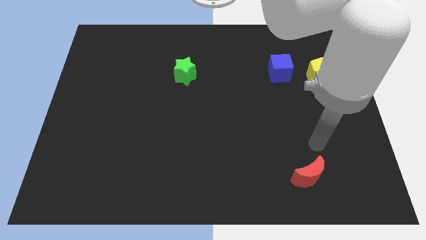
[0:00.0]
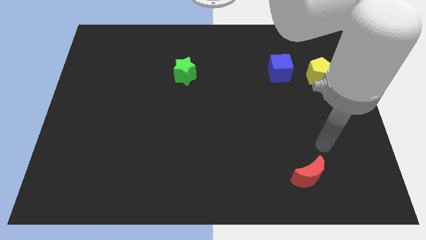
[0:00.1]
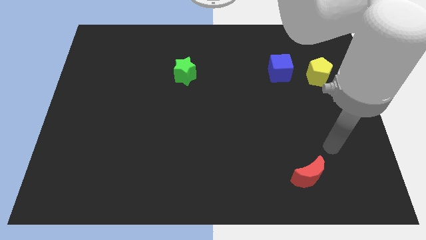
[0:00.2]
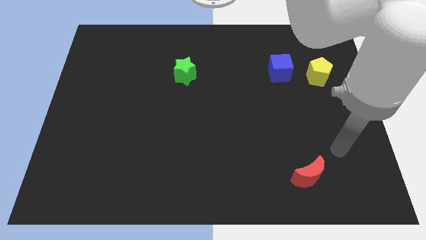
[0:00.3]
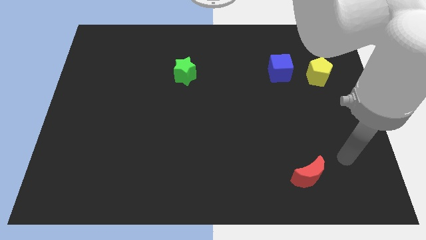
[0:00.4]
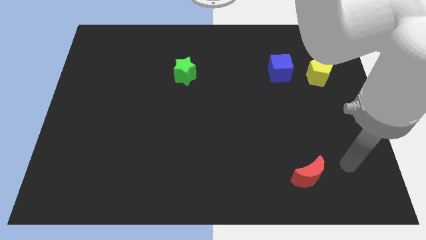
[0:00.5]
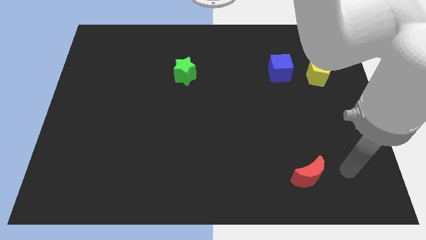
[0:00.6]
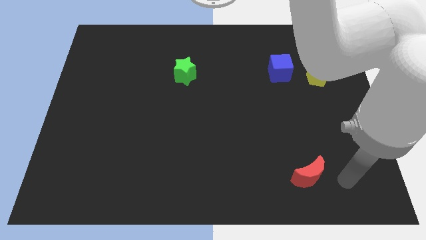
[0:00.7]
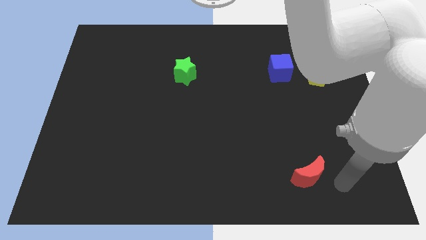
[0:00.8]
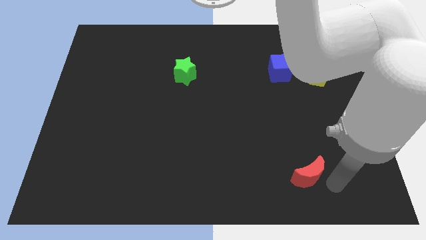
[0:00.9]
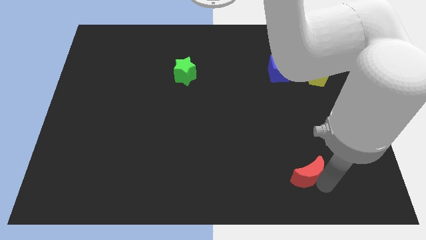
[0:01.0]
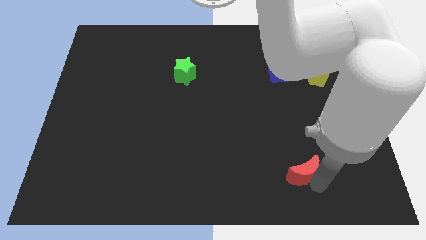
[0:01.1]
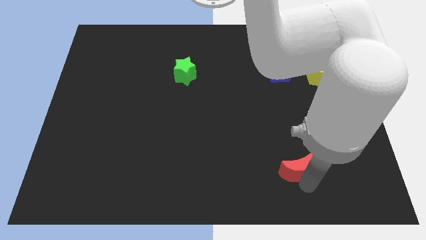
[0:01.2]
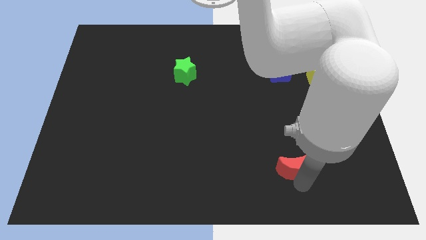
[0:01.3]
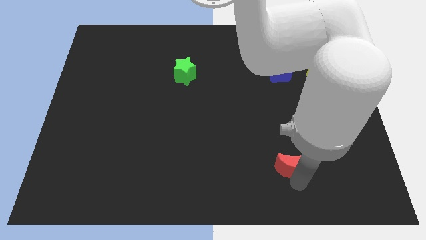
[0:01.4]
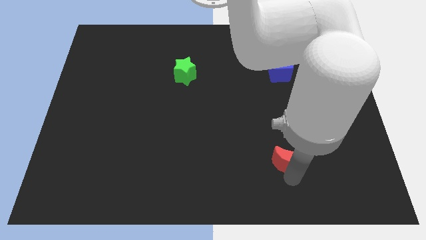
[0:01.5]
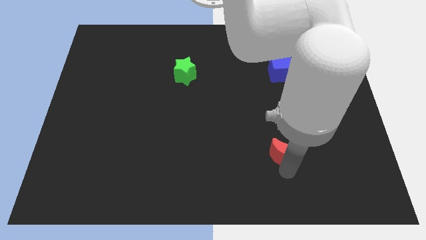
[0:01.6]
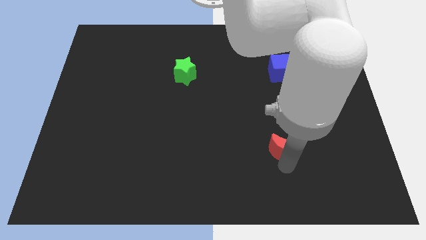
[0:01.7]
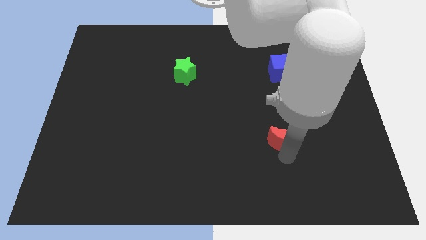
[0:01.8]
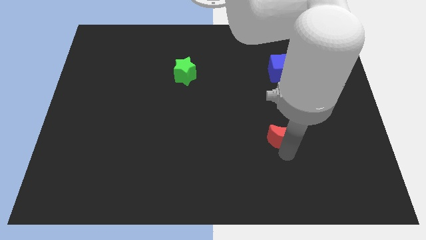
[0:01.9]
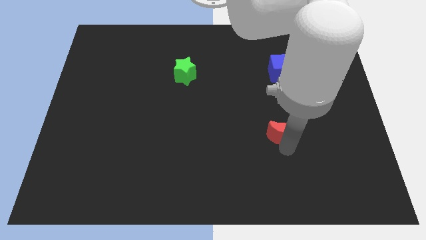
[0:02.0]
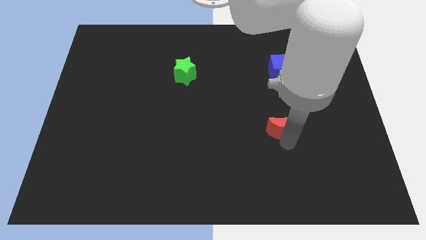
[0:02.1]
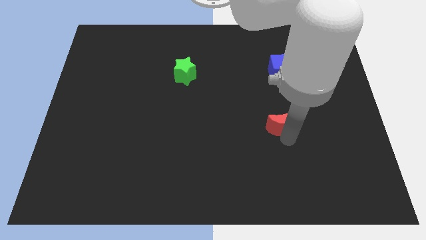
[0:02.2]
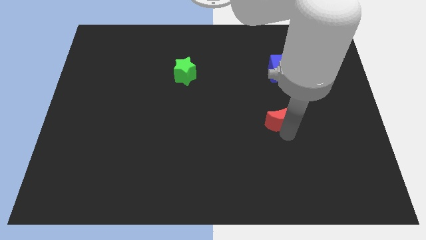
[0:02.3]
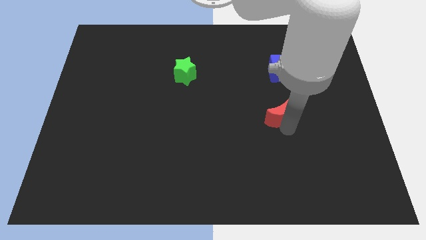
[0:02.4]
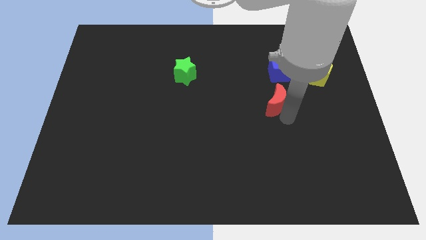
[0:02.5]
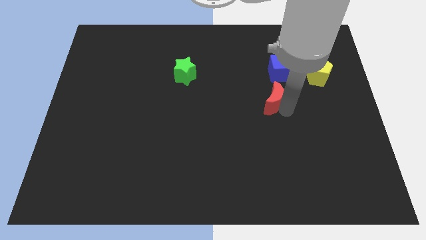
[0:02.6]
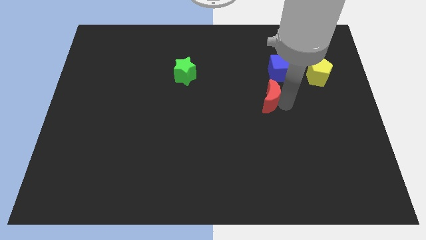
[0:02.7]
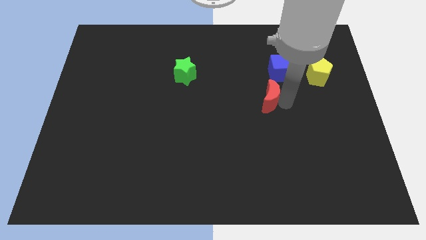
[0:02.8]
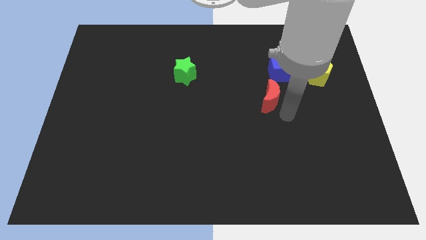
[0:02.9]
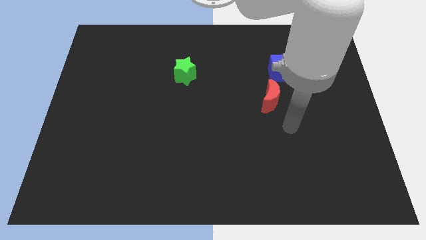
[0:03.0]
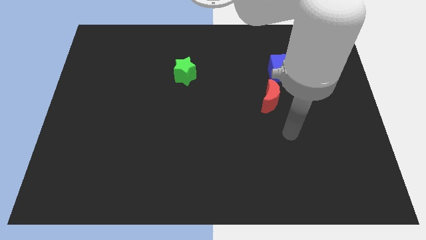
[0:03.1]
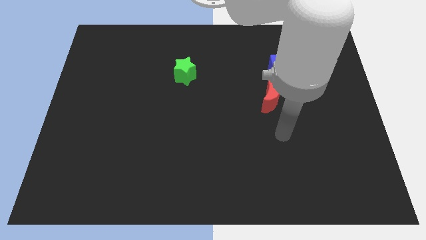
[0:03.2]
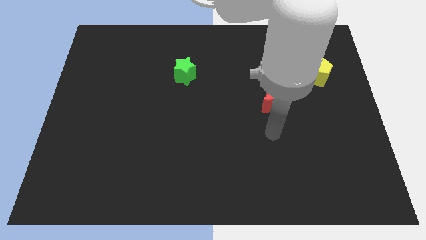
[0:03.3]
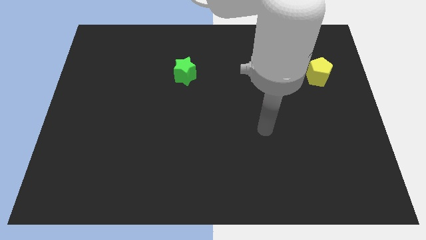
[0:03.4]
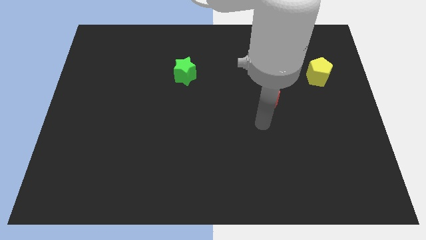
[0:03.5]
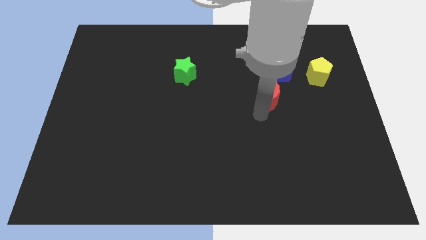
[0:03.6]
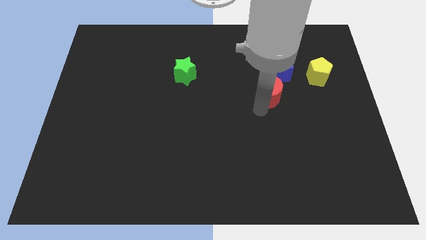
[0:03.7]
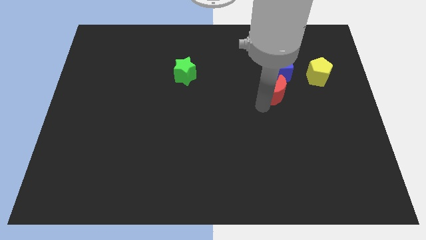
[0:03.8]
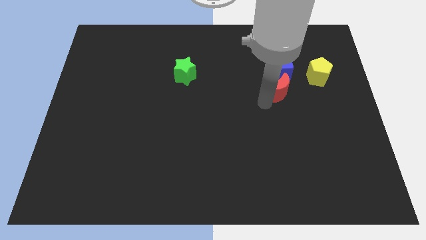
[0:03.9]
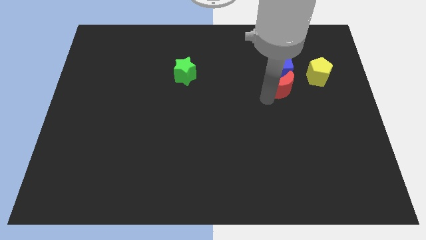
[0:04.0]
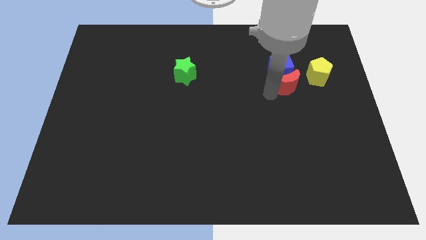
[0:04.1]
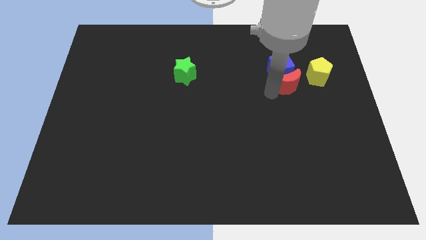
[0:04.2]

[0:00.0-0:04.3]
slide the red moon close to the cube

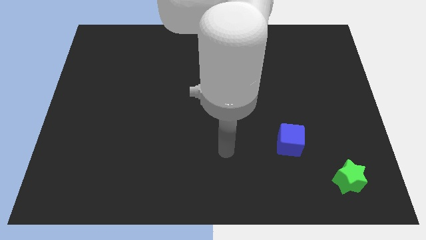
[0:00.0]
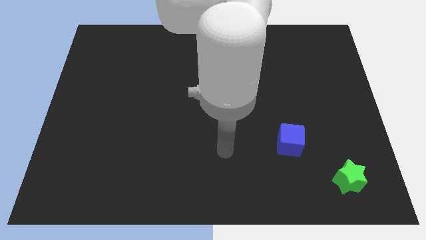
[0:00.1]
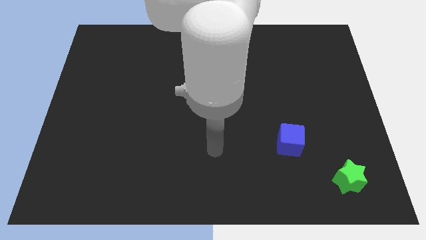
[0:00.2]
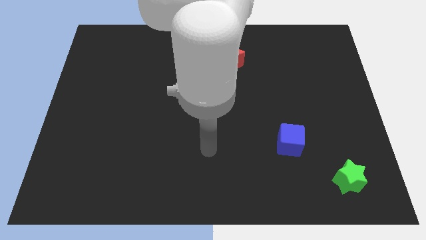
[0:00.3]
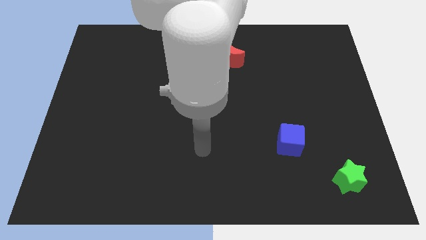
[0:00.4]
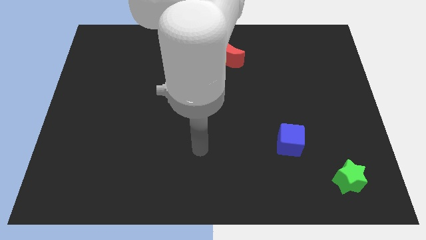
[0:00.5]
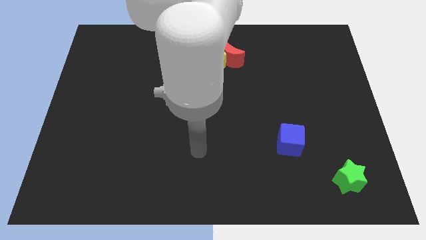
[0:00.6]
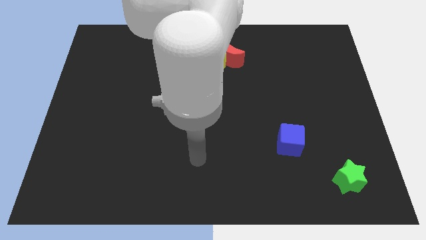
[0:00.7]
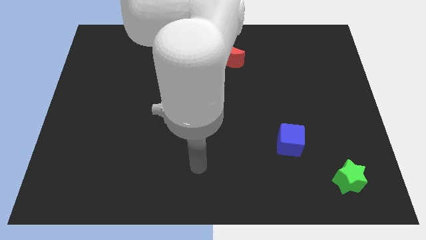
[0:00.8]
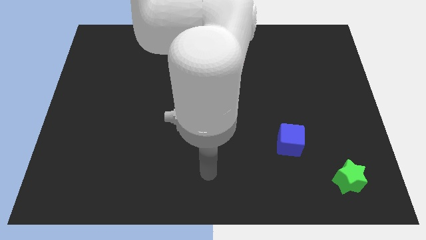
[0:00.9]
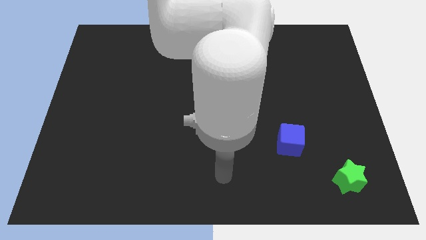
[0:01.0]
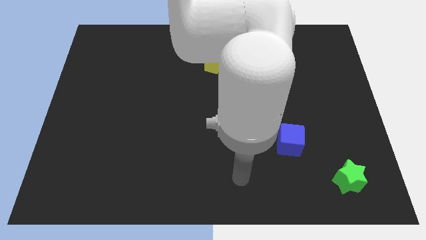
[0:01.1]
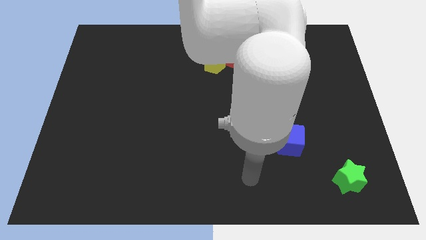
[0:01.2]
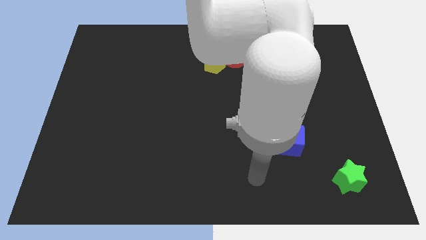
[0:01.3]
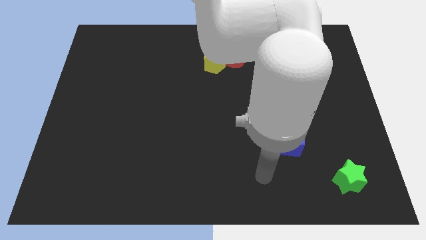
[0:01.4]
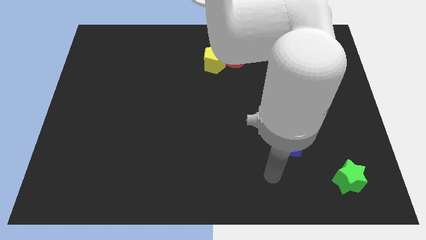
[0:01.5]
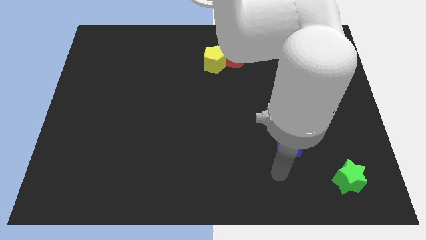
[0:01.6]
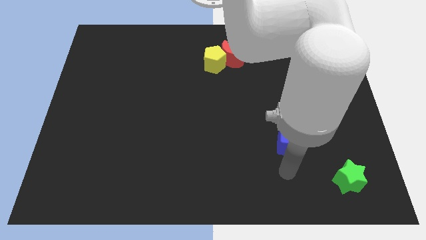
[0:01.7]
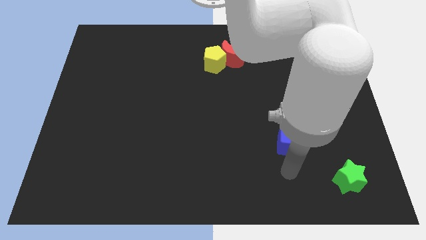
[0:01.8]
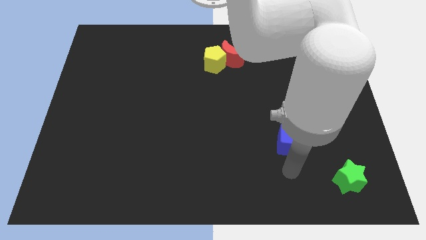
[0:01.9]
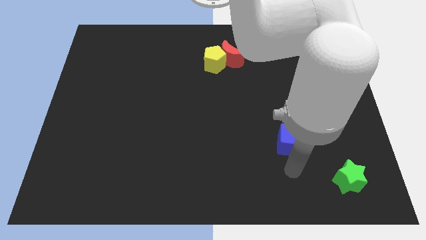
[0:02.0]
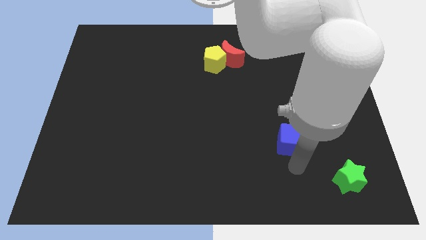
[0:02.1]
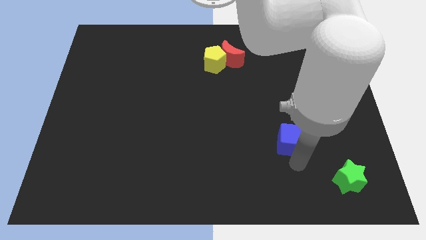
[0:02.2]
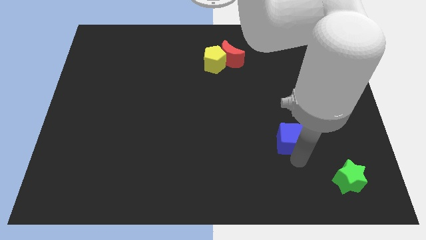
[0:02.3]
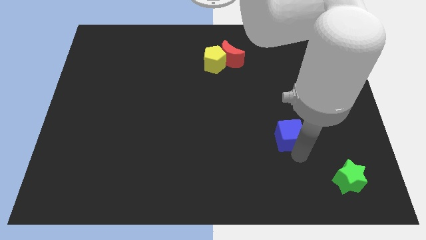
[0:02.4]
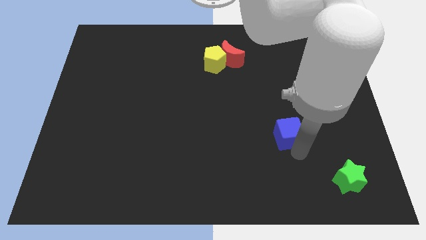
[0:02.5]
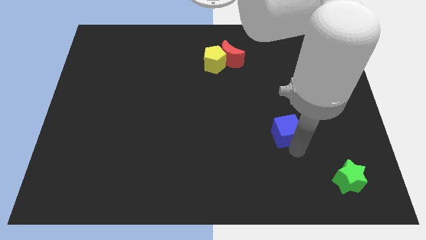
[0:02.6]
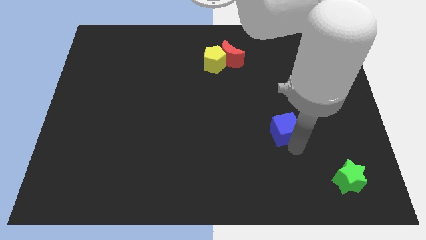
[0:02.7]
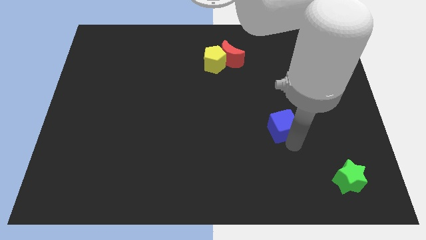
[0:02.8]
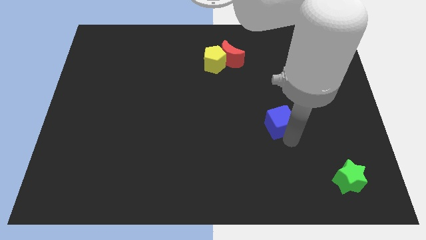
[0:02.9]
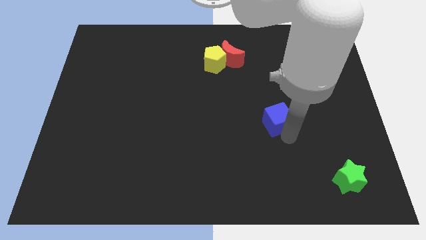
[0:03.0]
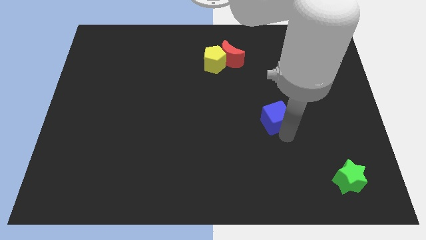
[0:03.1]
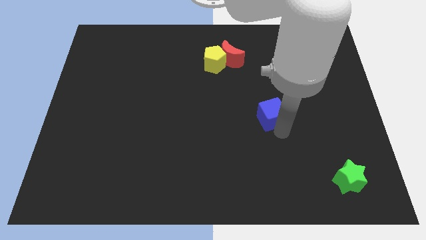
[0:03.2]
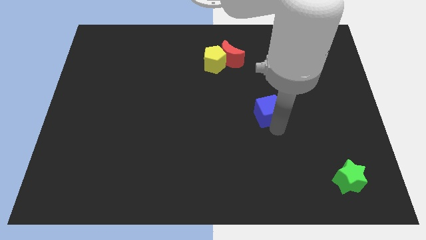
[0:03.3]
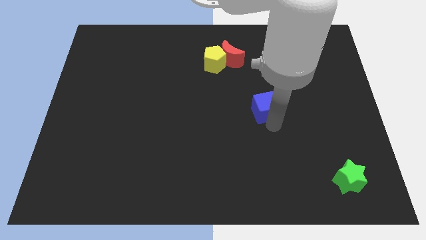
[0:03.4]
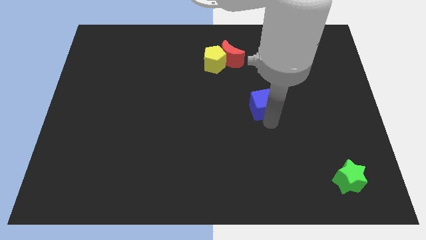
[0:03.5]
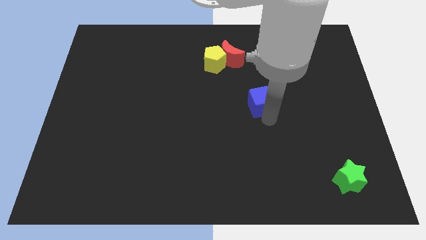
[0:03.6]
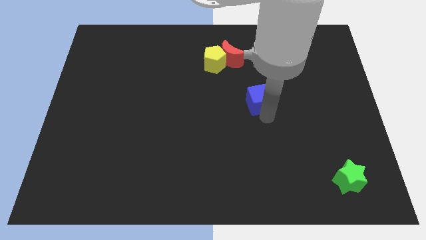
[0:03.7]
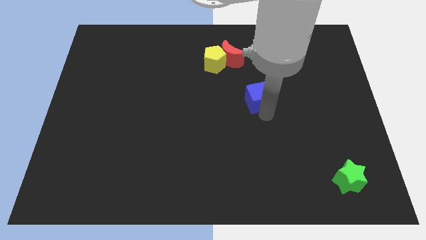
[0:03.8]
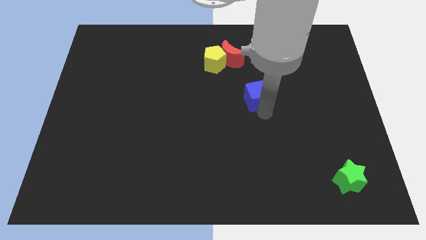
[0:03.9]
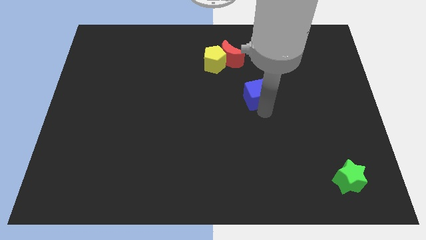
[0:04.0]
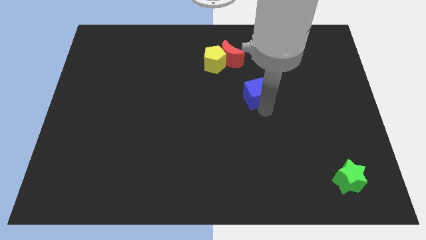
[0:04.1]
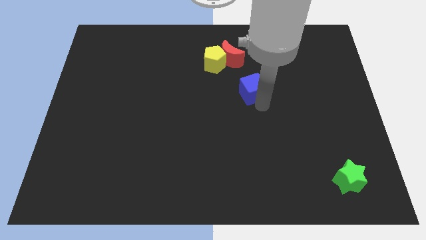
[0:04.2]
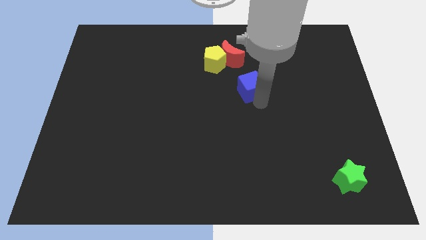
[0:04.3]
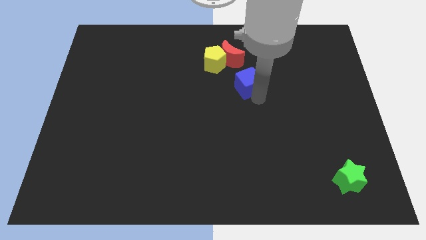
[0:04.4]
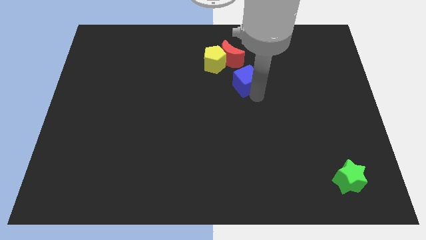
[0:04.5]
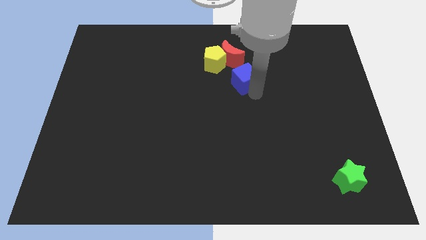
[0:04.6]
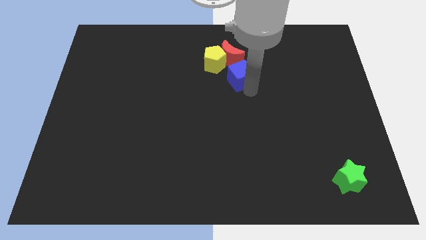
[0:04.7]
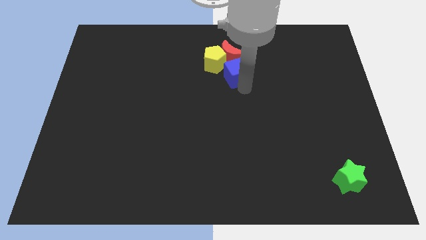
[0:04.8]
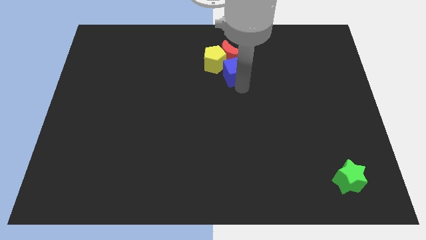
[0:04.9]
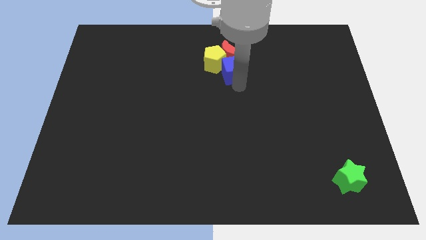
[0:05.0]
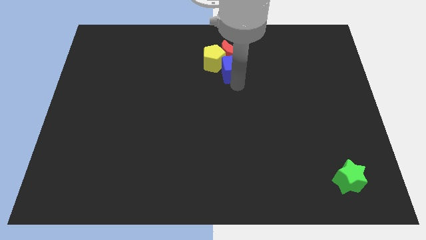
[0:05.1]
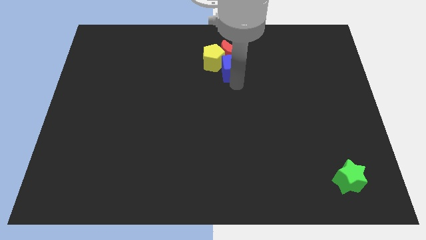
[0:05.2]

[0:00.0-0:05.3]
slide the blue cube close to the pentagon
